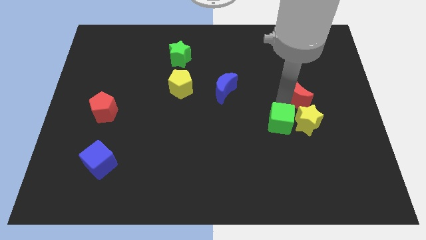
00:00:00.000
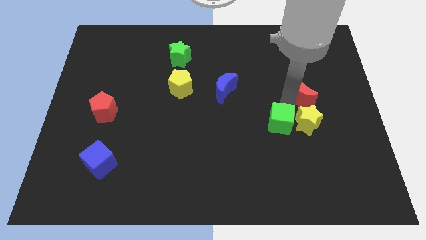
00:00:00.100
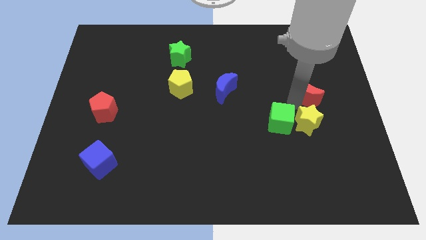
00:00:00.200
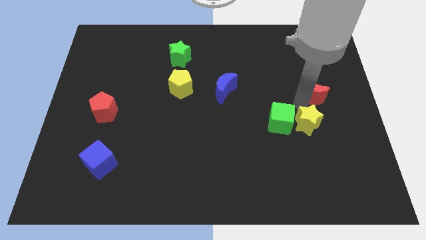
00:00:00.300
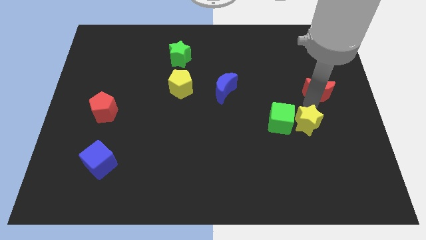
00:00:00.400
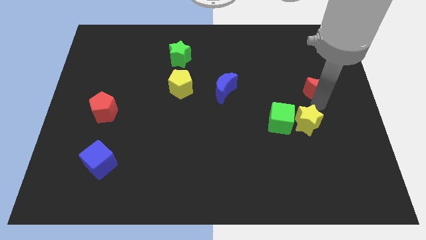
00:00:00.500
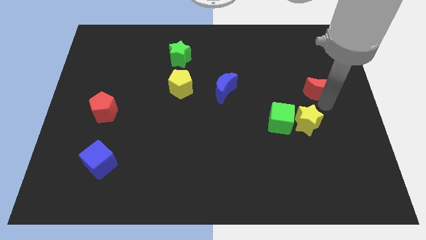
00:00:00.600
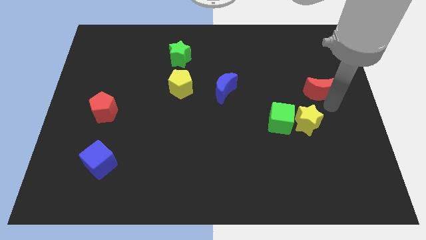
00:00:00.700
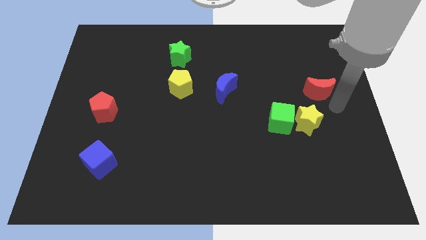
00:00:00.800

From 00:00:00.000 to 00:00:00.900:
push the red crescent slightly upwards

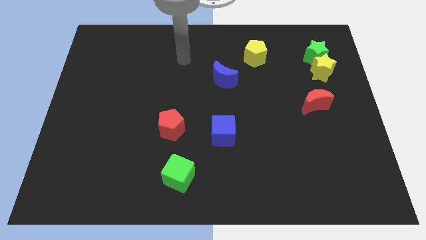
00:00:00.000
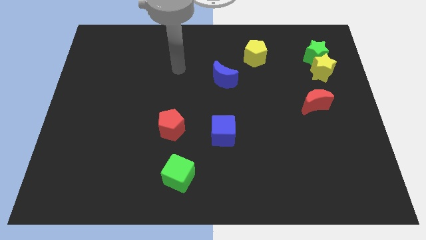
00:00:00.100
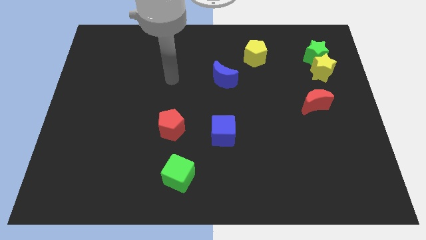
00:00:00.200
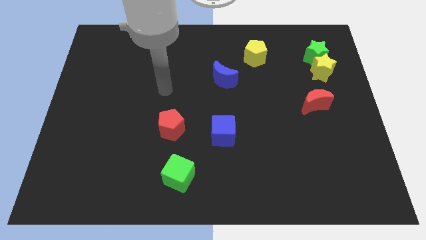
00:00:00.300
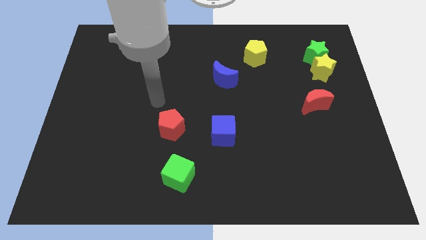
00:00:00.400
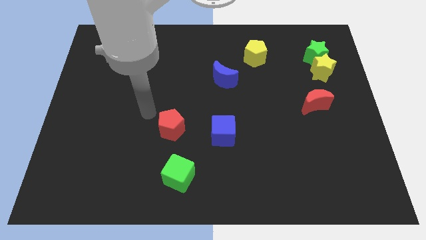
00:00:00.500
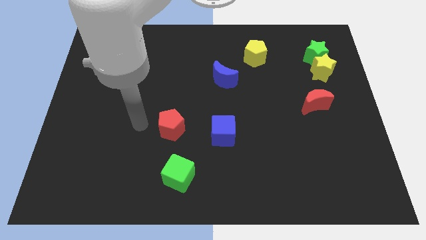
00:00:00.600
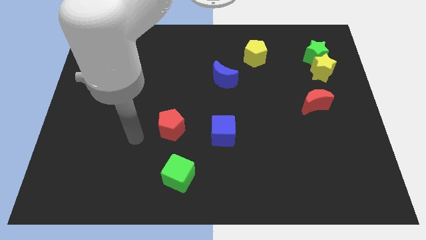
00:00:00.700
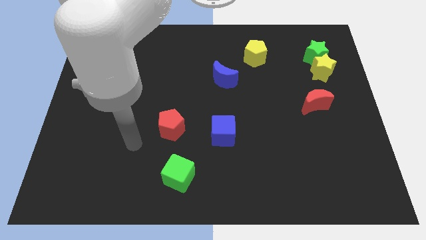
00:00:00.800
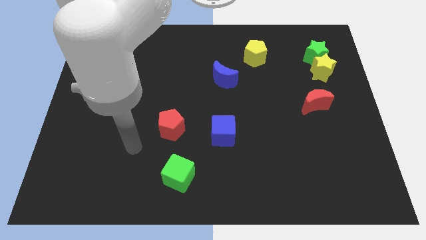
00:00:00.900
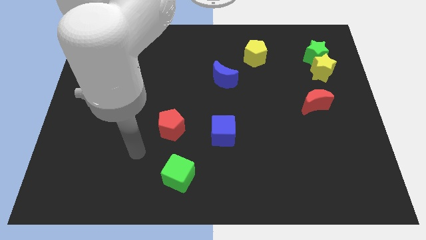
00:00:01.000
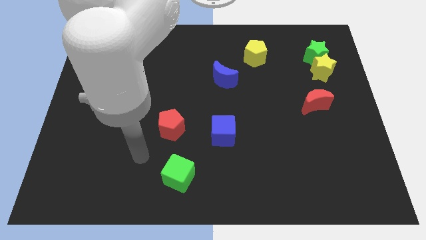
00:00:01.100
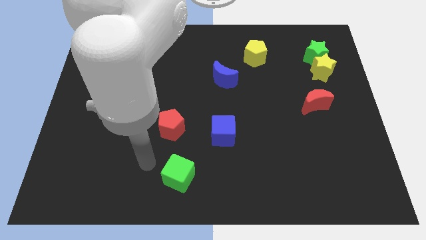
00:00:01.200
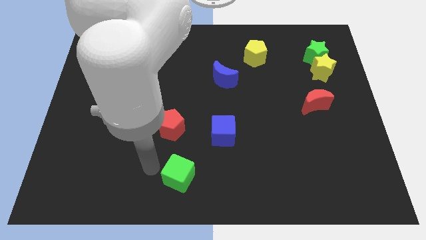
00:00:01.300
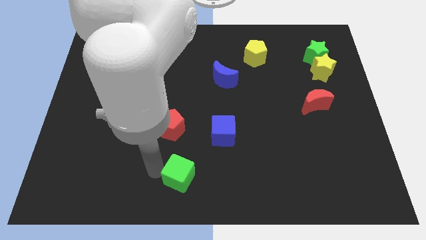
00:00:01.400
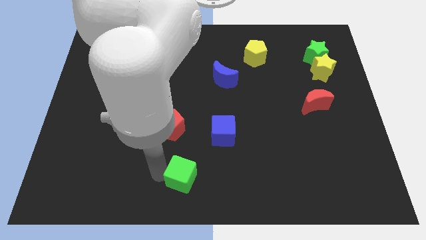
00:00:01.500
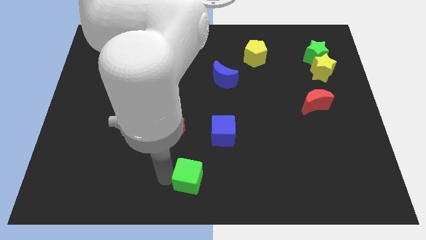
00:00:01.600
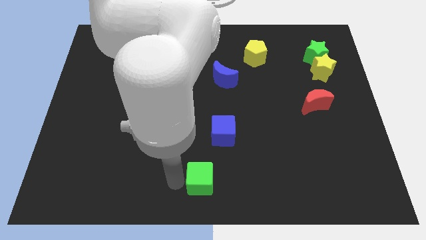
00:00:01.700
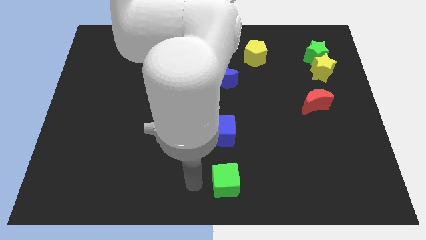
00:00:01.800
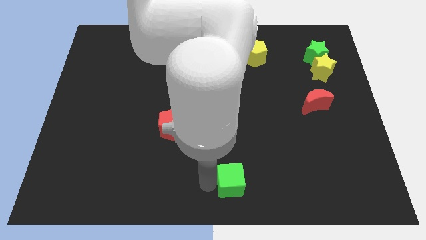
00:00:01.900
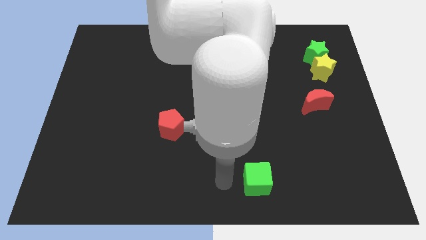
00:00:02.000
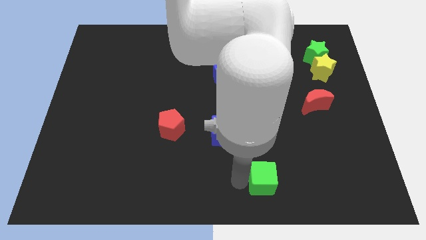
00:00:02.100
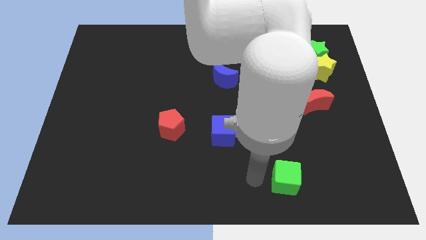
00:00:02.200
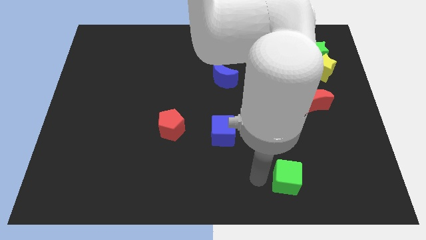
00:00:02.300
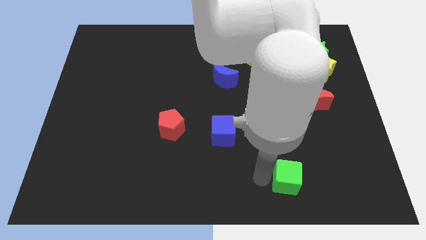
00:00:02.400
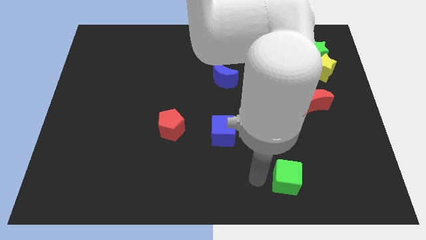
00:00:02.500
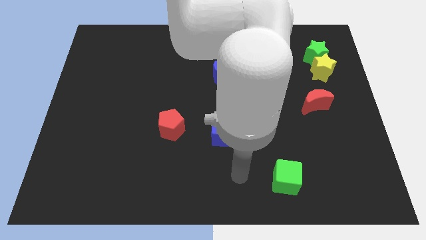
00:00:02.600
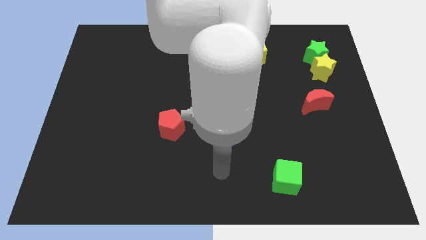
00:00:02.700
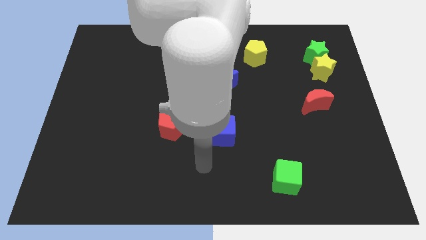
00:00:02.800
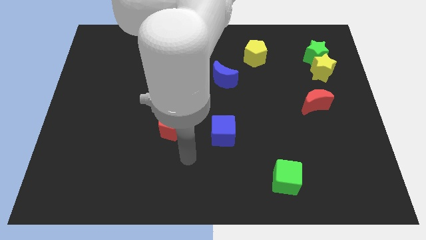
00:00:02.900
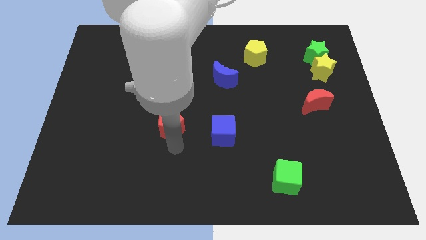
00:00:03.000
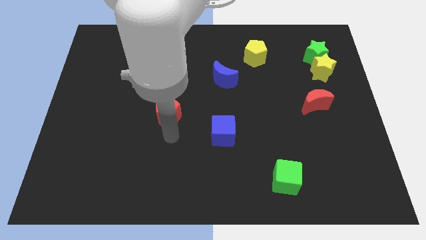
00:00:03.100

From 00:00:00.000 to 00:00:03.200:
move the green cube to the right bottom side of the boards slightly

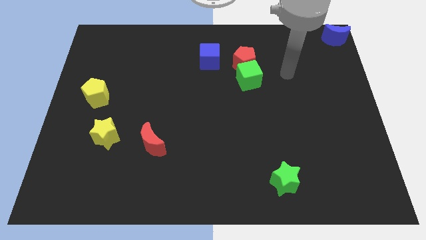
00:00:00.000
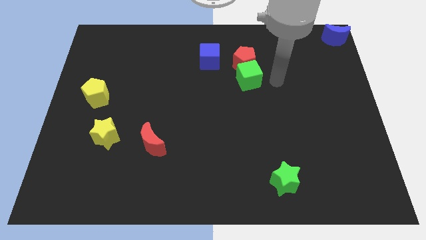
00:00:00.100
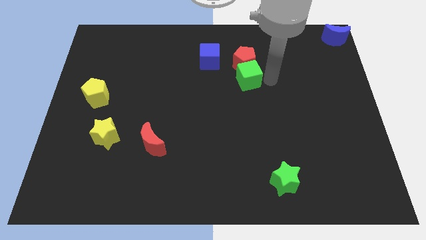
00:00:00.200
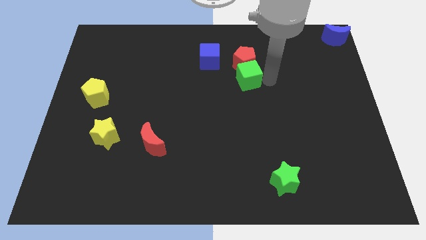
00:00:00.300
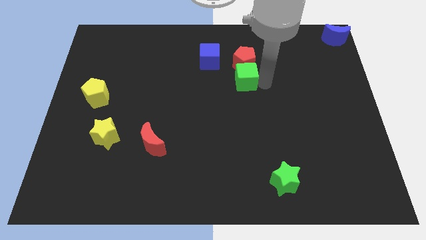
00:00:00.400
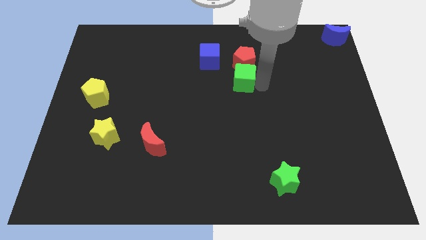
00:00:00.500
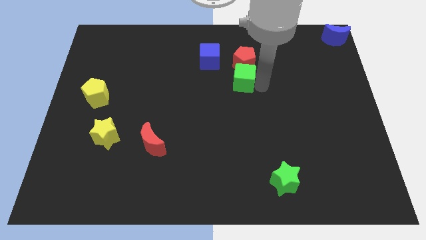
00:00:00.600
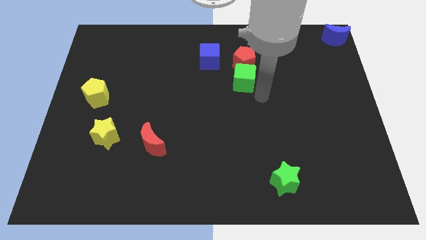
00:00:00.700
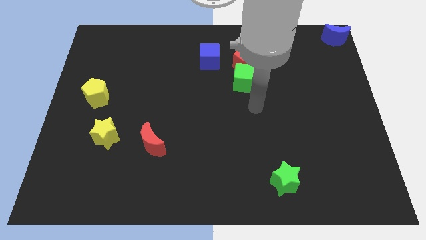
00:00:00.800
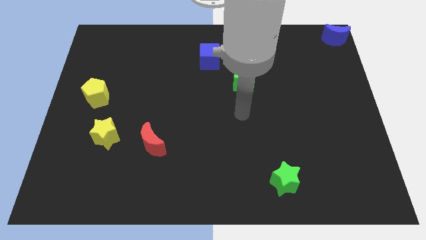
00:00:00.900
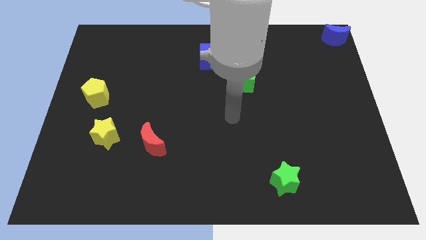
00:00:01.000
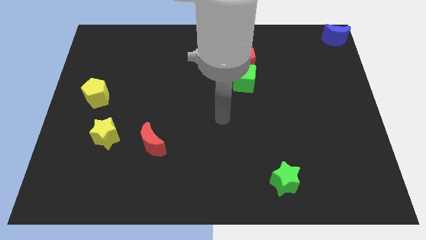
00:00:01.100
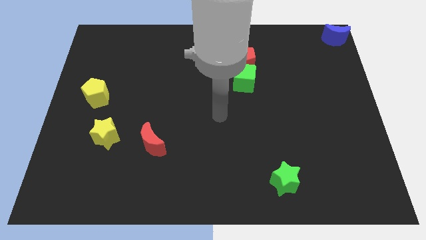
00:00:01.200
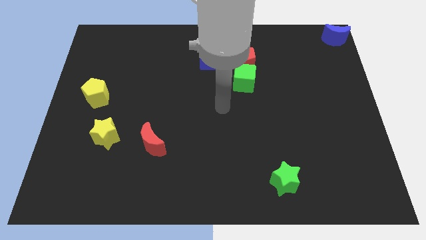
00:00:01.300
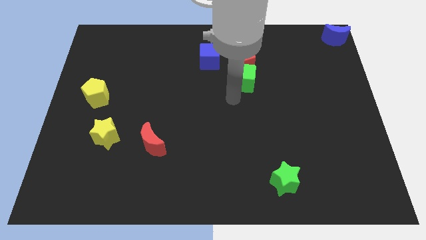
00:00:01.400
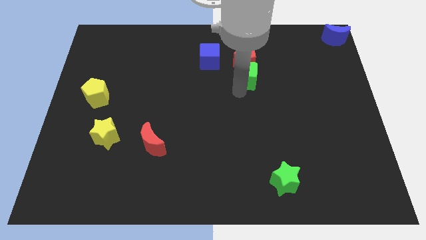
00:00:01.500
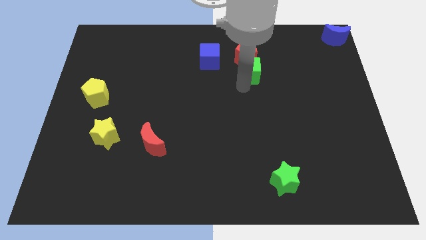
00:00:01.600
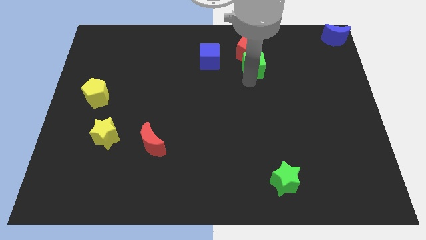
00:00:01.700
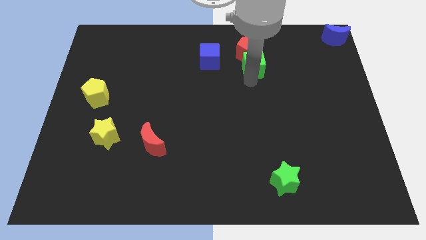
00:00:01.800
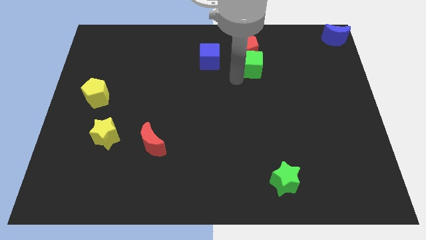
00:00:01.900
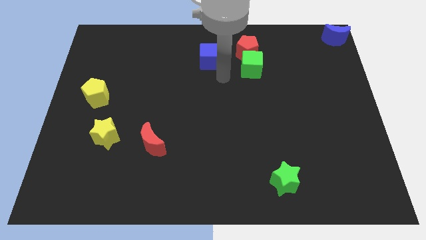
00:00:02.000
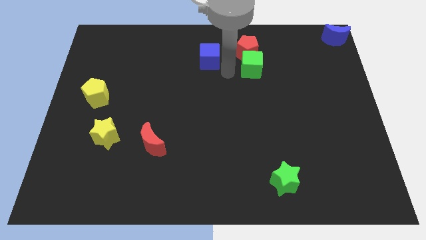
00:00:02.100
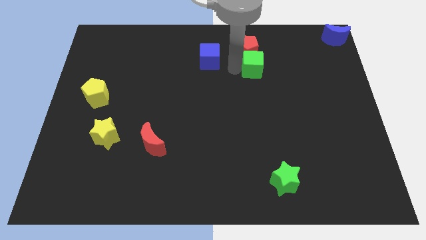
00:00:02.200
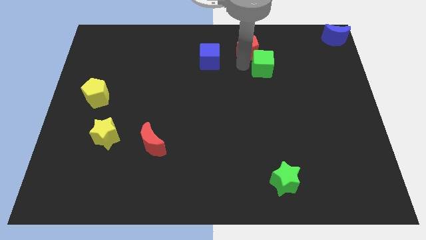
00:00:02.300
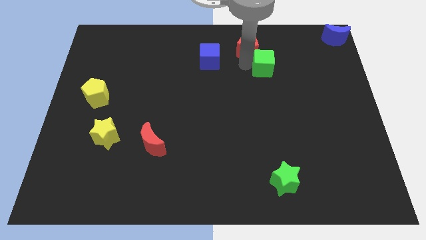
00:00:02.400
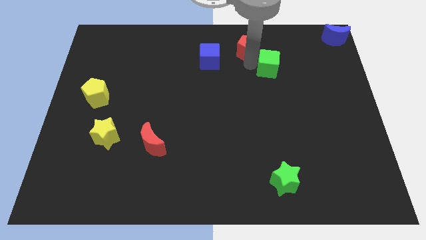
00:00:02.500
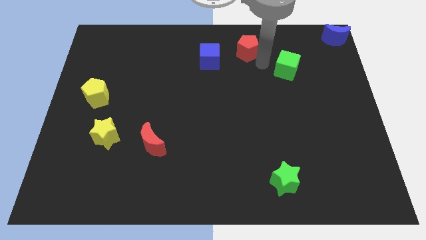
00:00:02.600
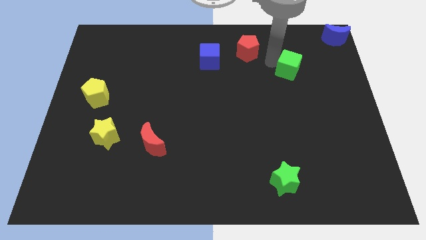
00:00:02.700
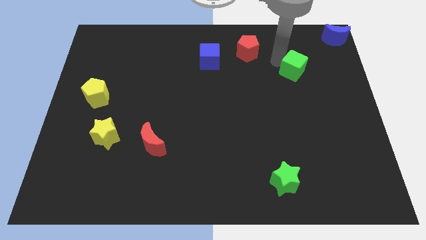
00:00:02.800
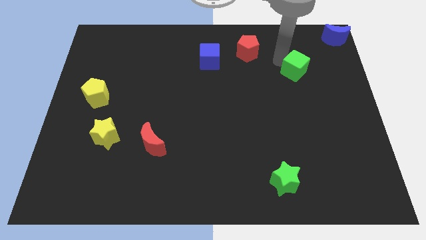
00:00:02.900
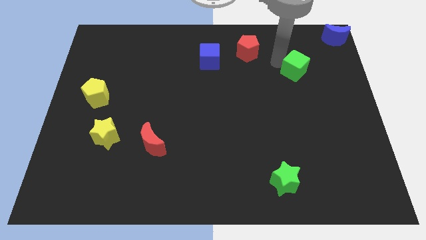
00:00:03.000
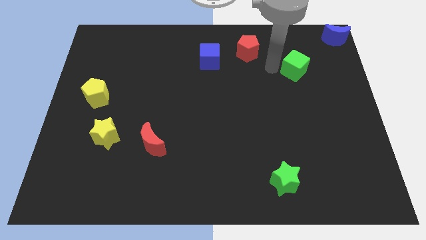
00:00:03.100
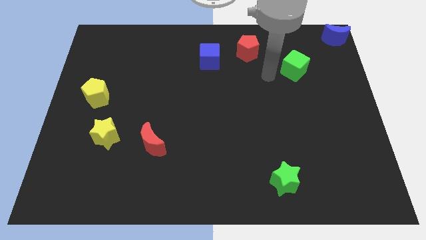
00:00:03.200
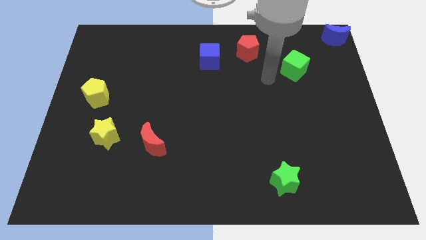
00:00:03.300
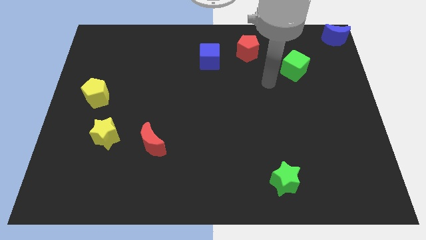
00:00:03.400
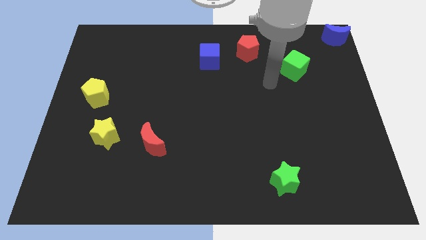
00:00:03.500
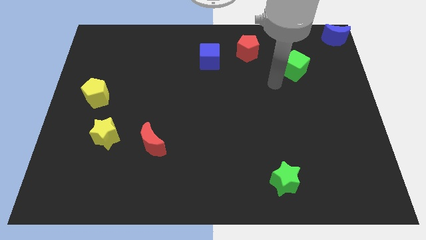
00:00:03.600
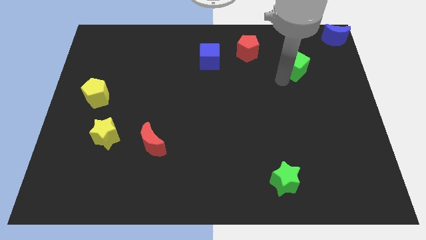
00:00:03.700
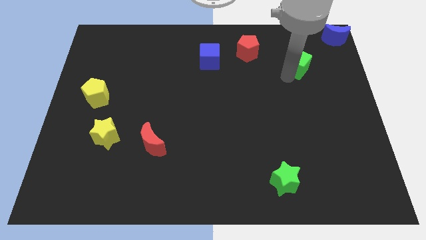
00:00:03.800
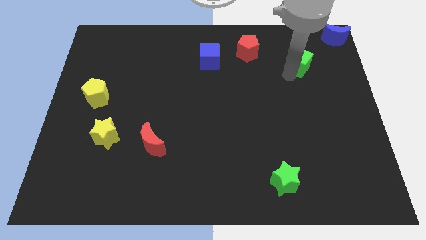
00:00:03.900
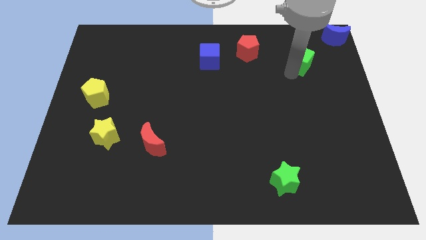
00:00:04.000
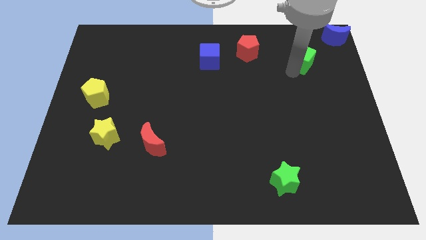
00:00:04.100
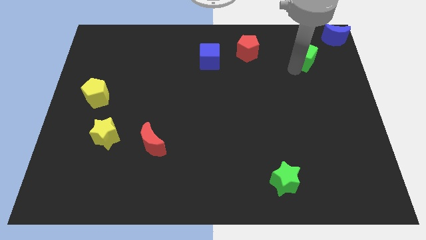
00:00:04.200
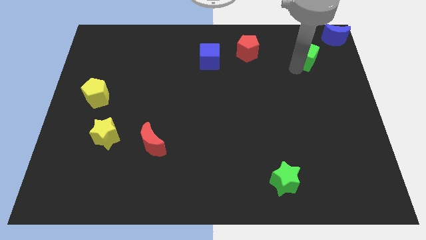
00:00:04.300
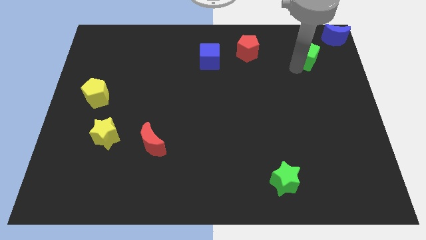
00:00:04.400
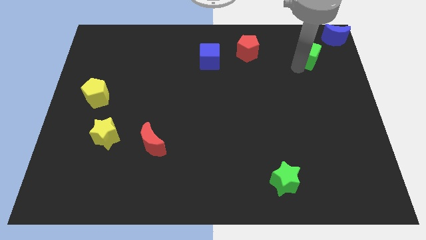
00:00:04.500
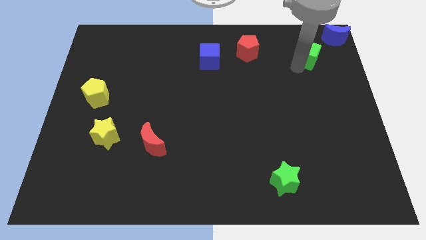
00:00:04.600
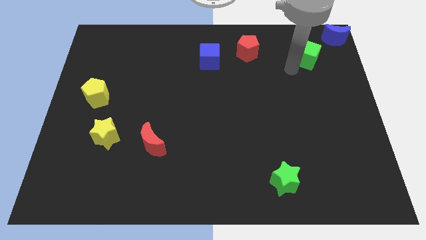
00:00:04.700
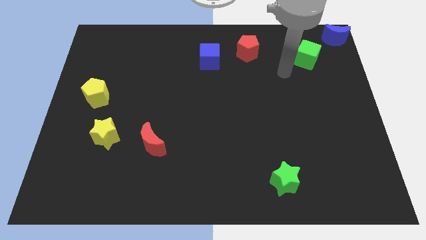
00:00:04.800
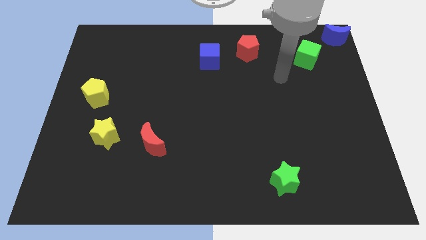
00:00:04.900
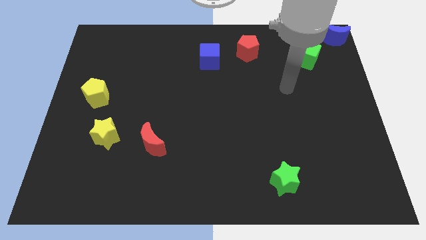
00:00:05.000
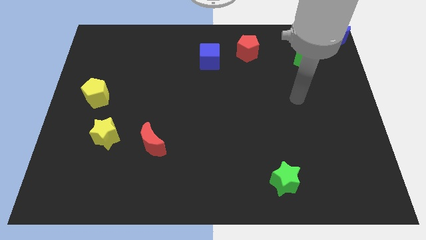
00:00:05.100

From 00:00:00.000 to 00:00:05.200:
place the green cube diagonally below the blue cube
